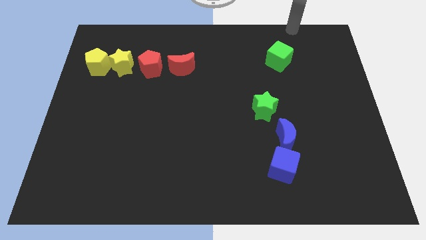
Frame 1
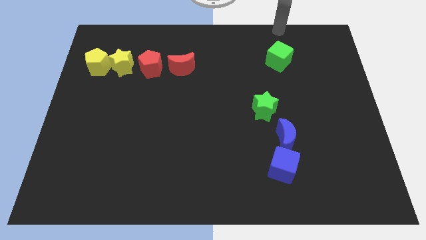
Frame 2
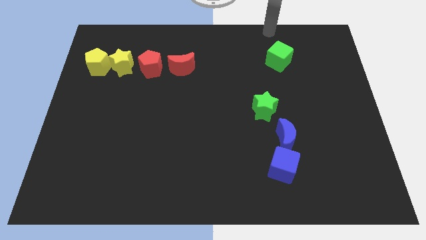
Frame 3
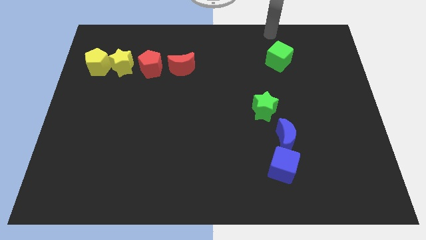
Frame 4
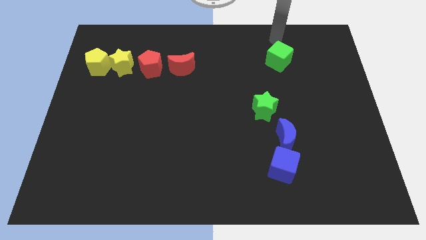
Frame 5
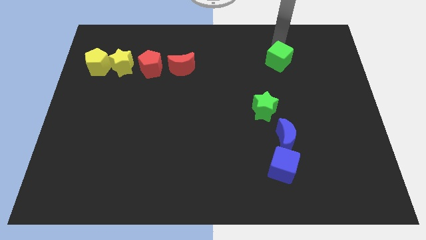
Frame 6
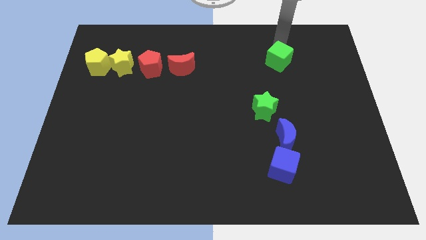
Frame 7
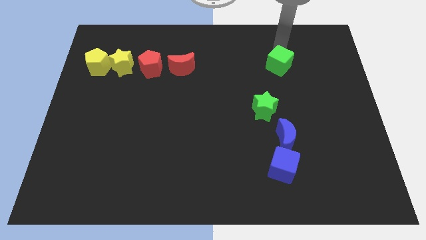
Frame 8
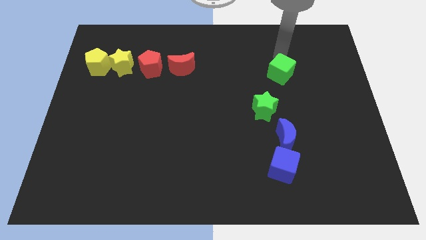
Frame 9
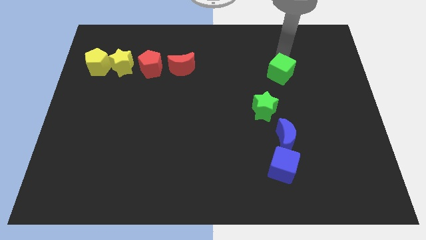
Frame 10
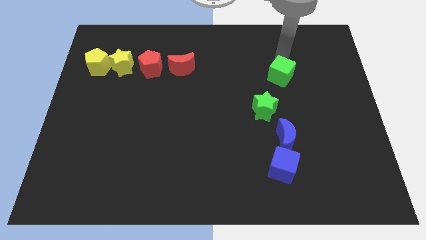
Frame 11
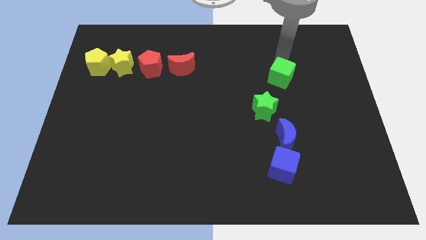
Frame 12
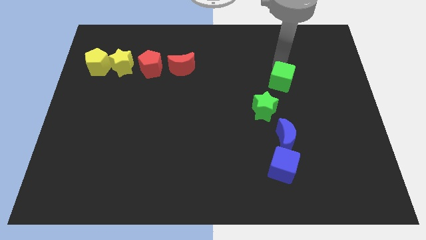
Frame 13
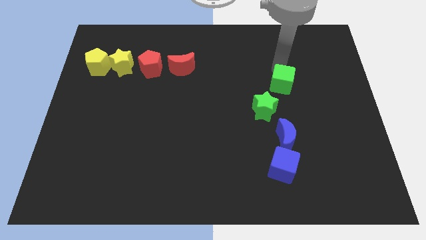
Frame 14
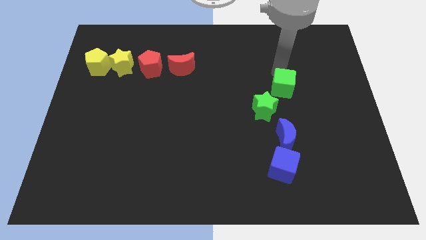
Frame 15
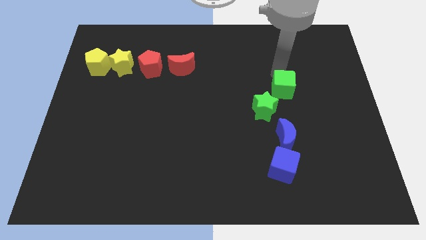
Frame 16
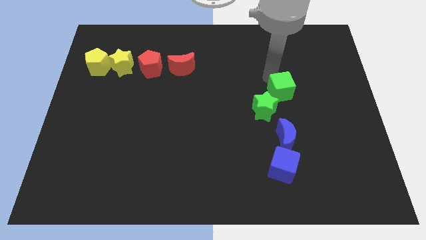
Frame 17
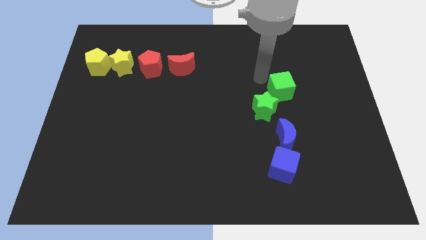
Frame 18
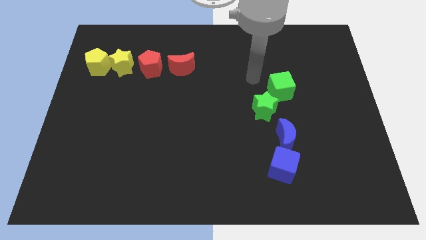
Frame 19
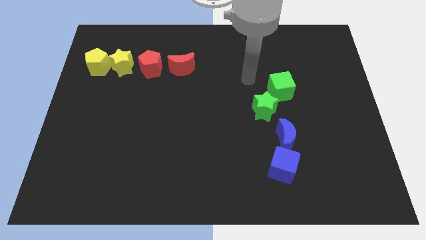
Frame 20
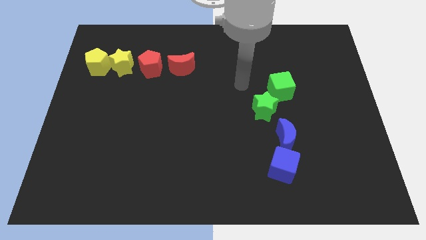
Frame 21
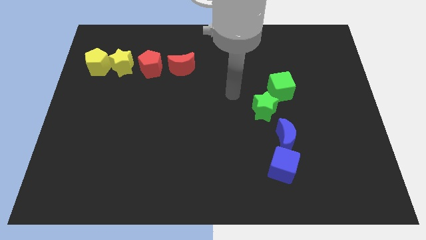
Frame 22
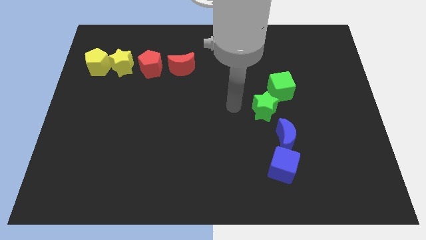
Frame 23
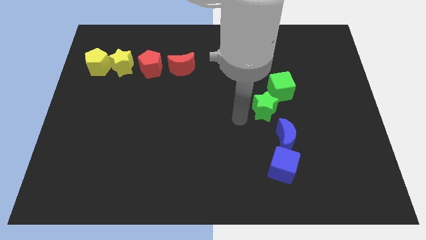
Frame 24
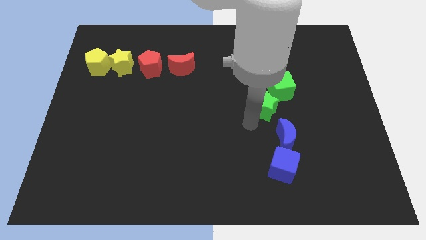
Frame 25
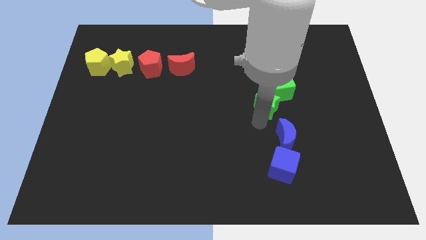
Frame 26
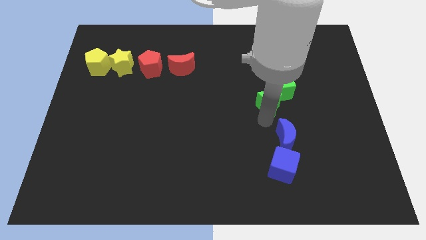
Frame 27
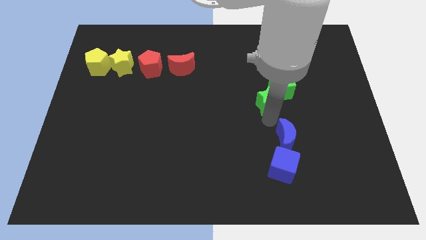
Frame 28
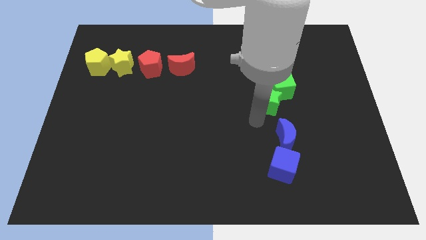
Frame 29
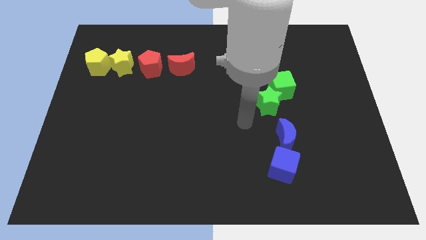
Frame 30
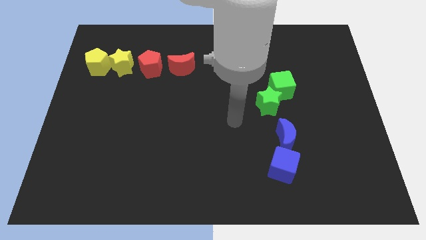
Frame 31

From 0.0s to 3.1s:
group up the green blocks above the group of blue blocks

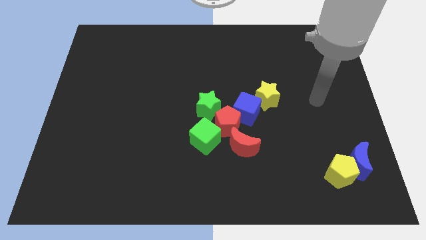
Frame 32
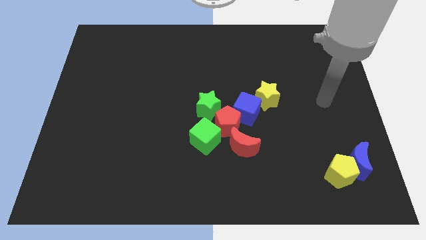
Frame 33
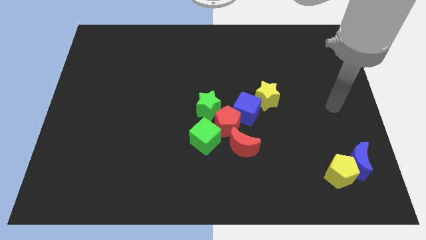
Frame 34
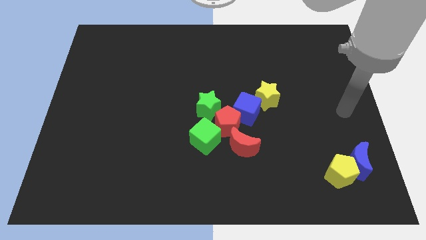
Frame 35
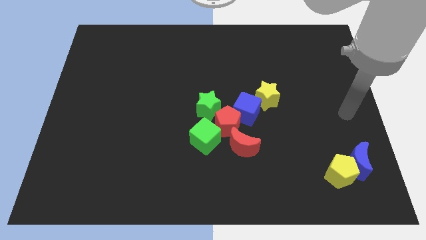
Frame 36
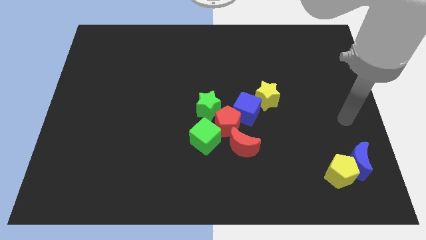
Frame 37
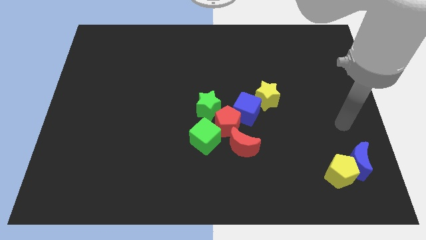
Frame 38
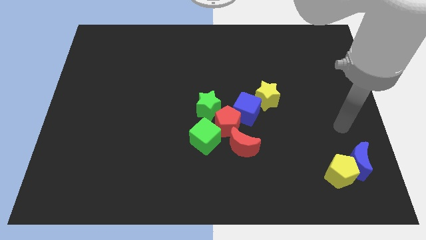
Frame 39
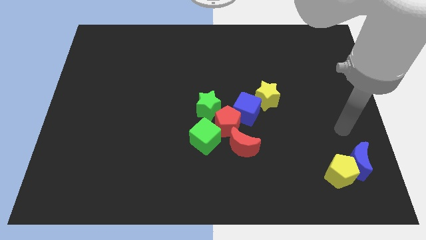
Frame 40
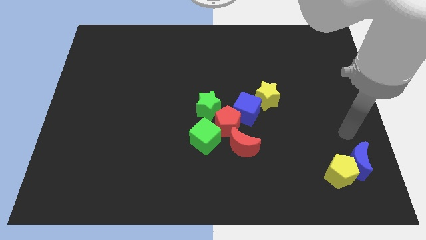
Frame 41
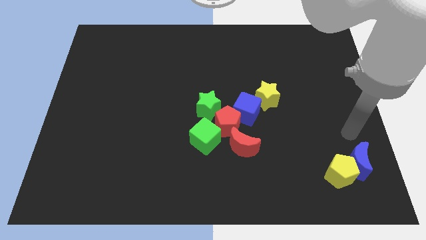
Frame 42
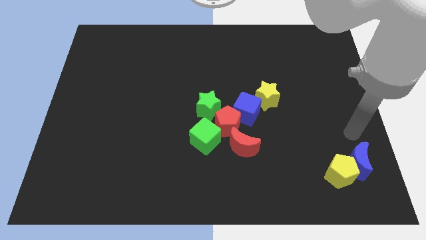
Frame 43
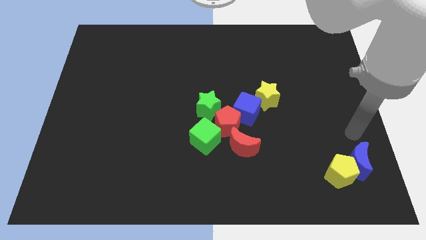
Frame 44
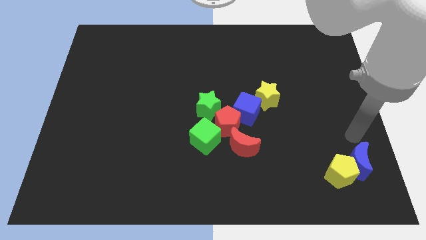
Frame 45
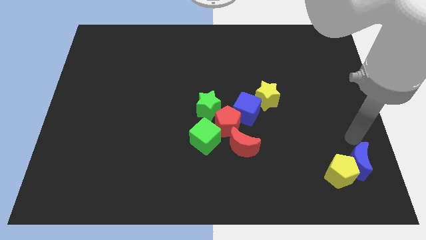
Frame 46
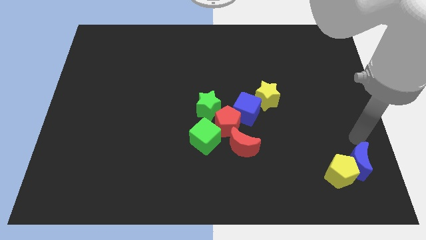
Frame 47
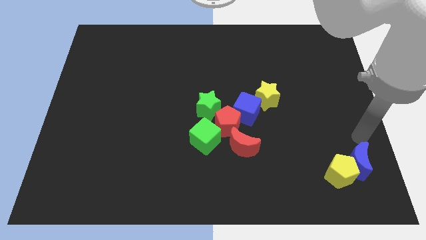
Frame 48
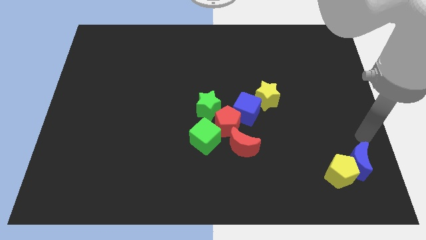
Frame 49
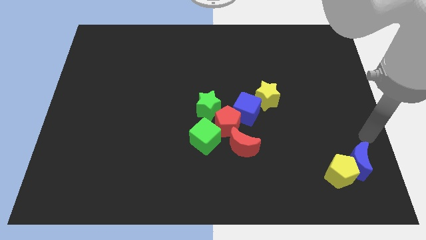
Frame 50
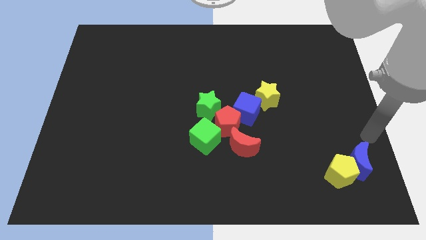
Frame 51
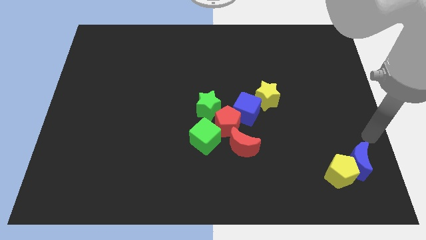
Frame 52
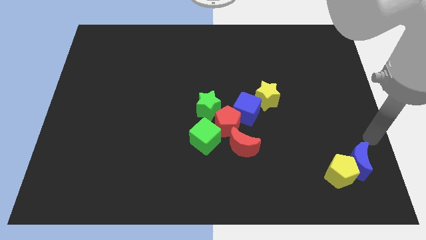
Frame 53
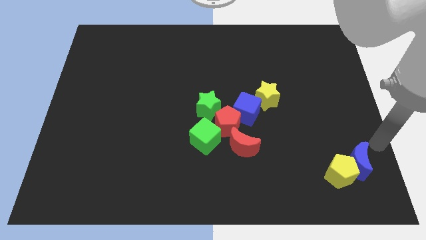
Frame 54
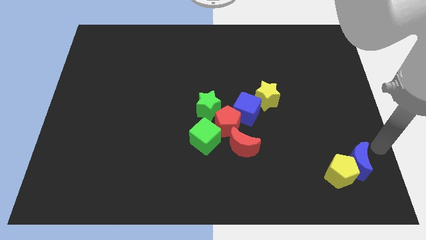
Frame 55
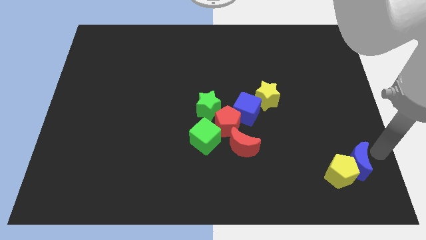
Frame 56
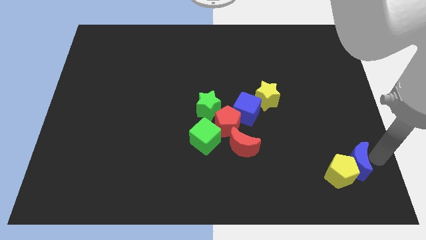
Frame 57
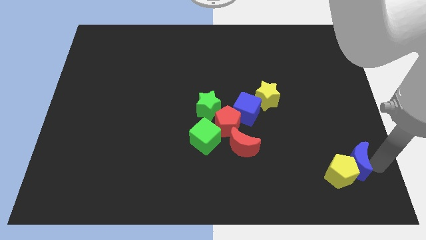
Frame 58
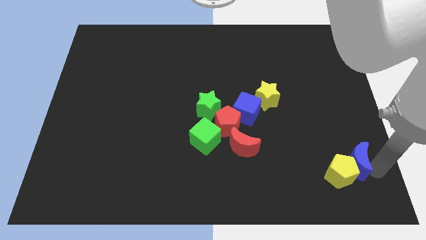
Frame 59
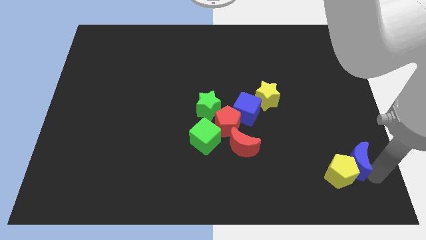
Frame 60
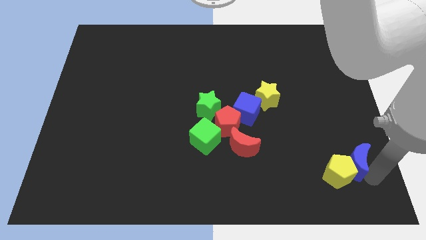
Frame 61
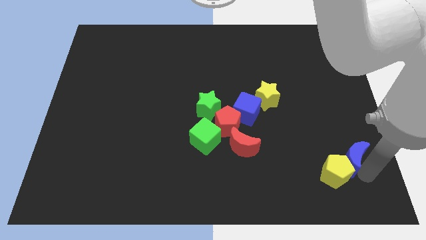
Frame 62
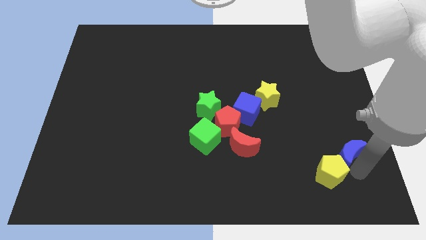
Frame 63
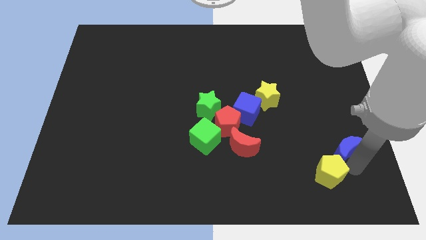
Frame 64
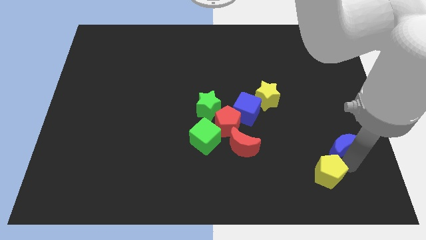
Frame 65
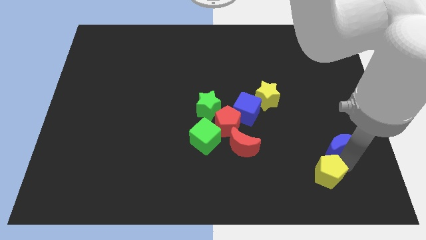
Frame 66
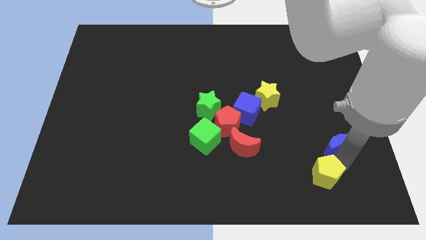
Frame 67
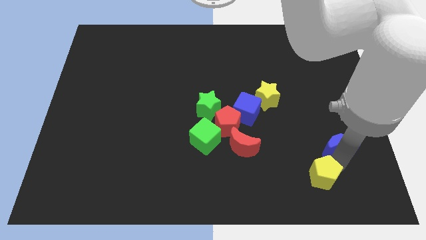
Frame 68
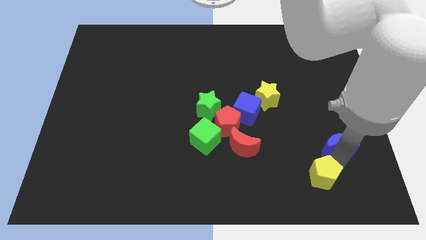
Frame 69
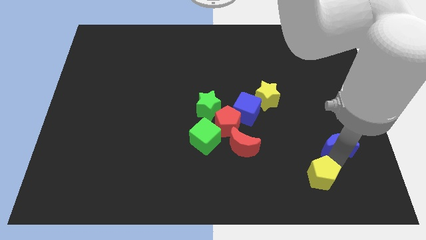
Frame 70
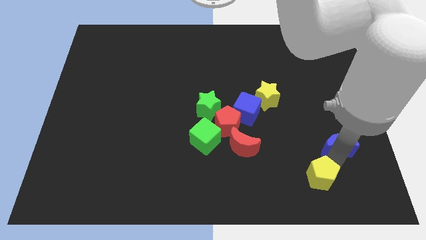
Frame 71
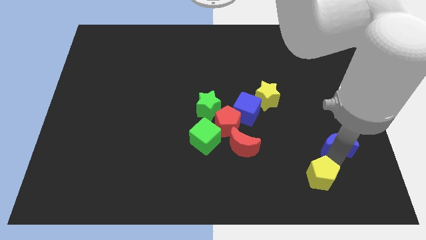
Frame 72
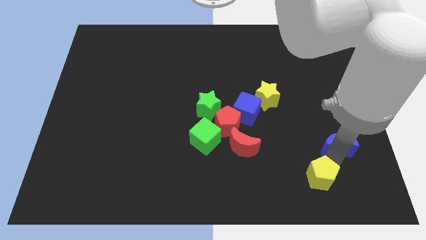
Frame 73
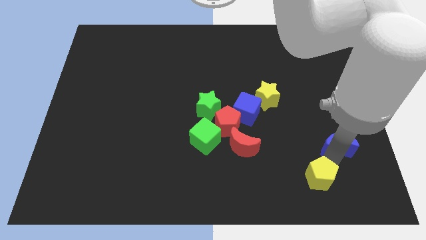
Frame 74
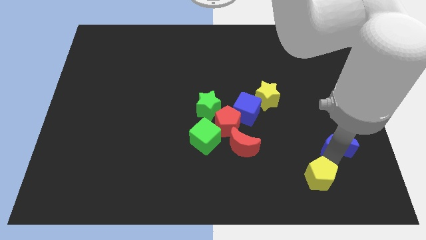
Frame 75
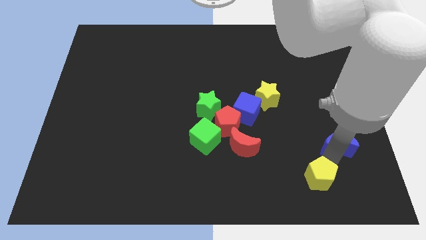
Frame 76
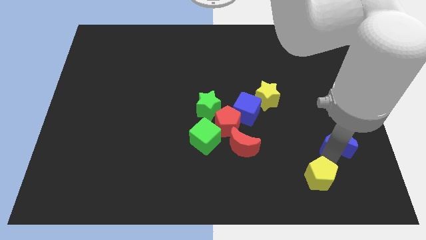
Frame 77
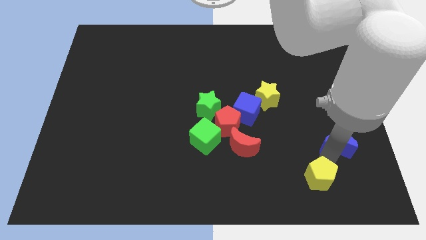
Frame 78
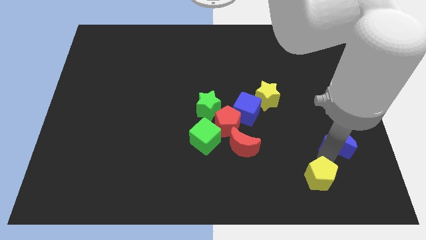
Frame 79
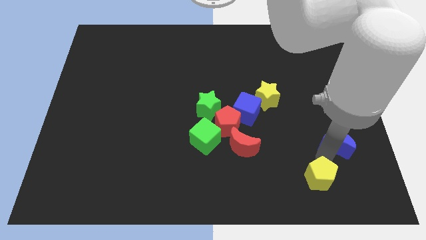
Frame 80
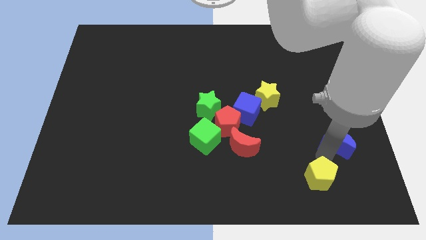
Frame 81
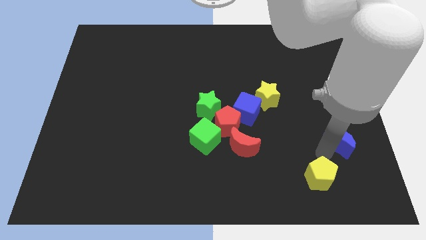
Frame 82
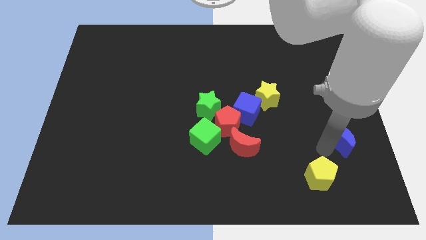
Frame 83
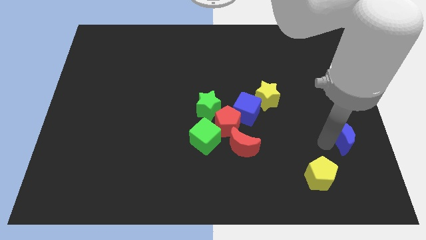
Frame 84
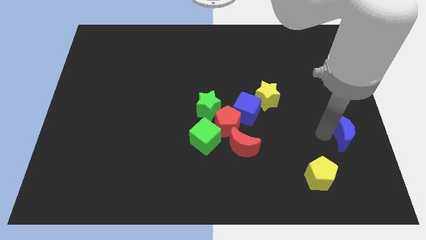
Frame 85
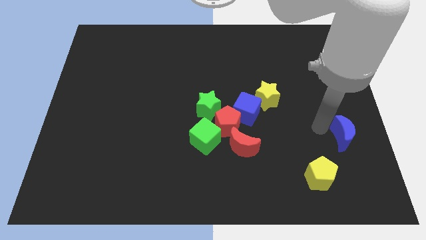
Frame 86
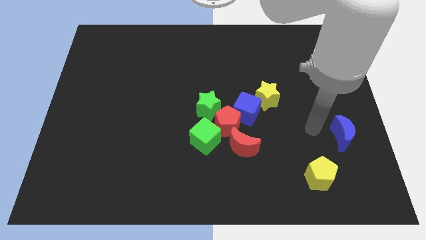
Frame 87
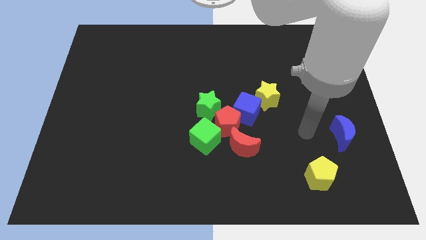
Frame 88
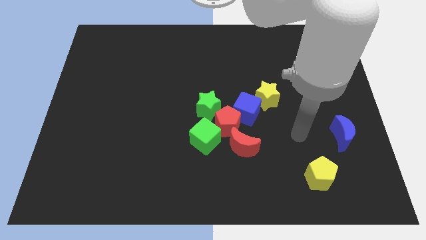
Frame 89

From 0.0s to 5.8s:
move the blue crescent to the right of the red crescent
